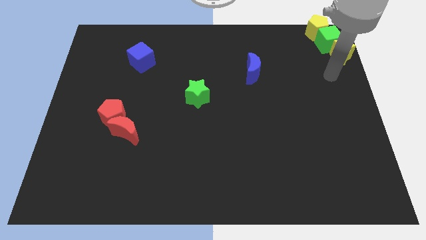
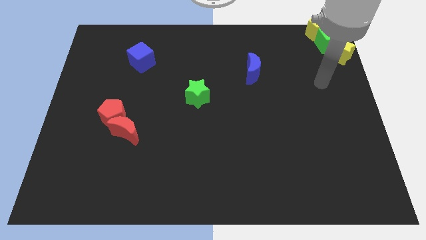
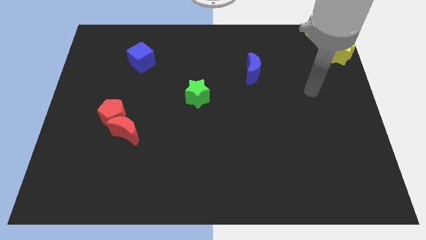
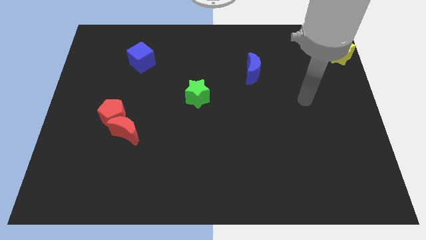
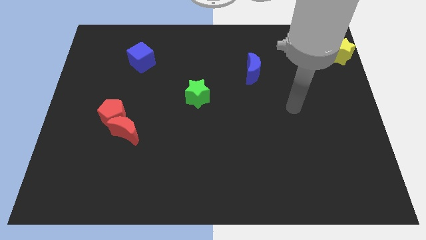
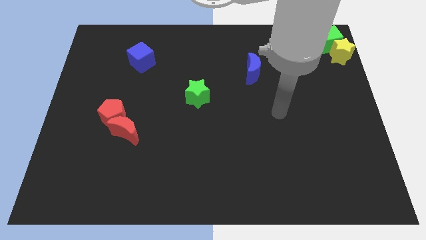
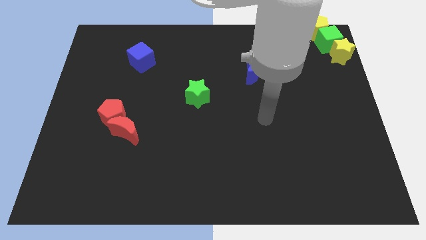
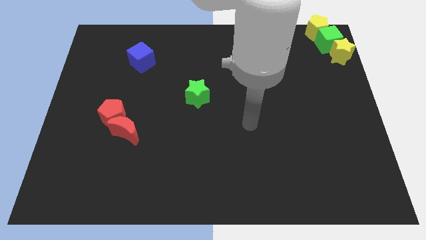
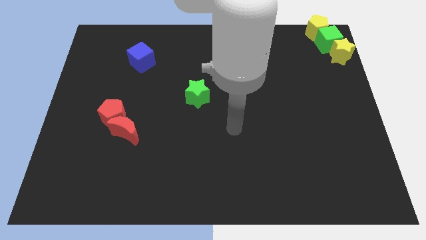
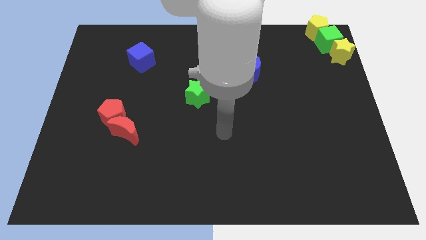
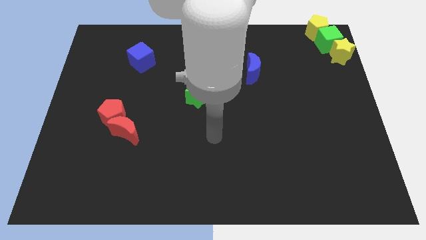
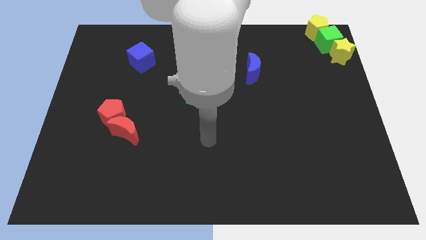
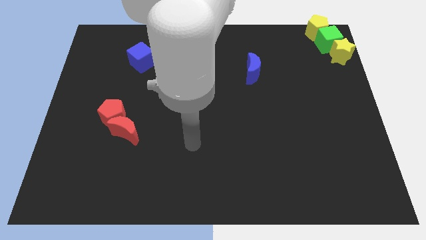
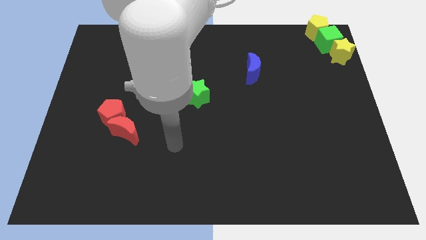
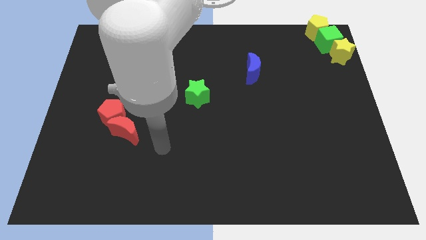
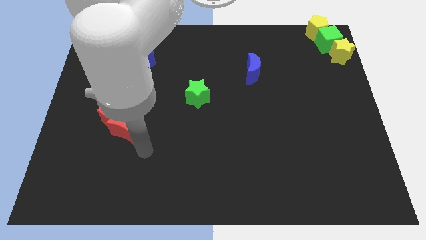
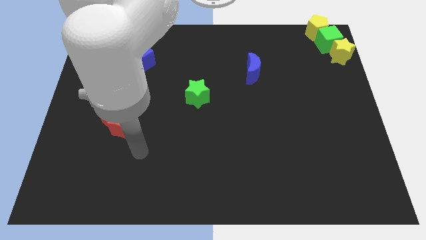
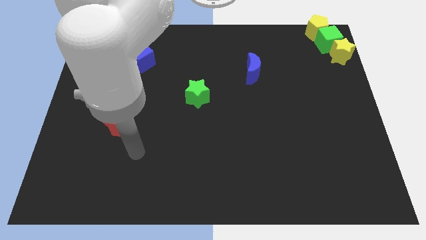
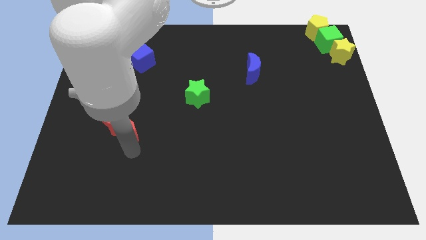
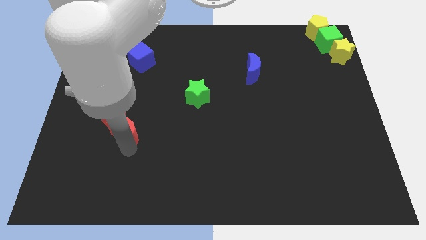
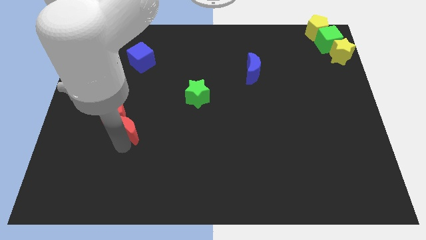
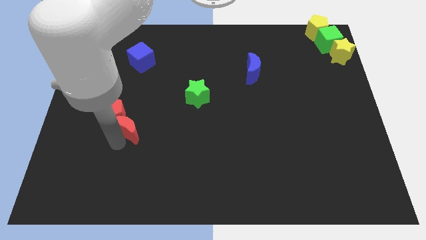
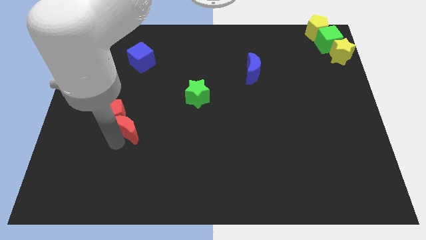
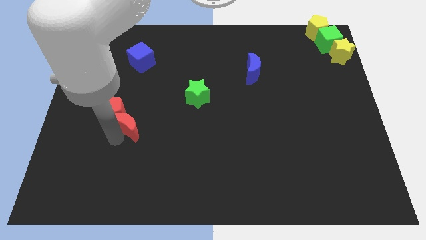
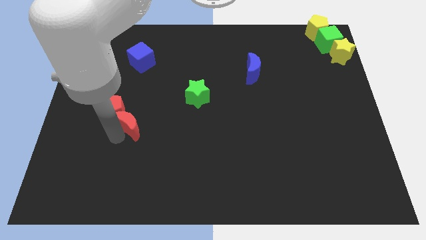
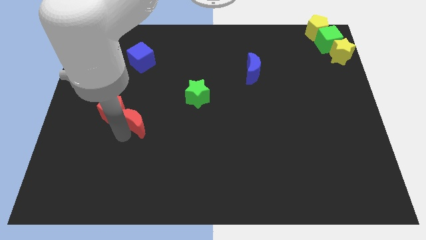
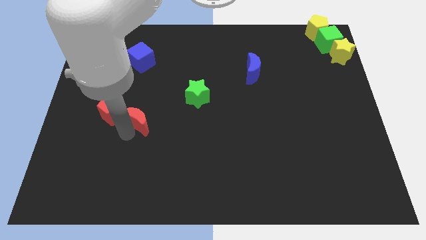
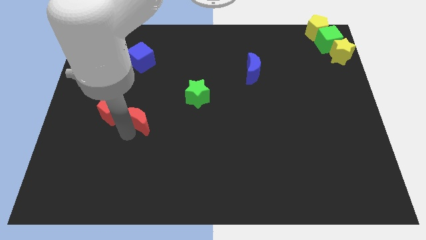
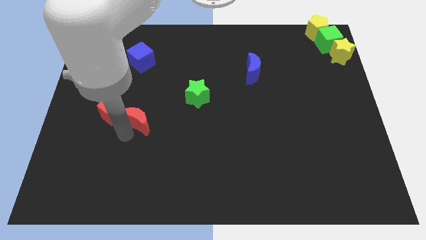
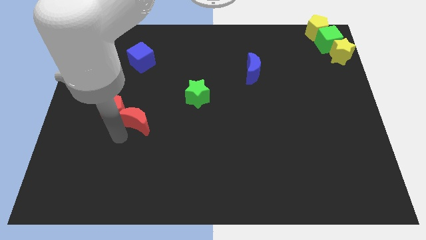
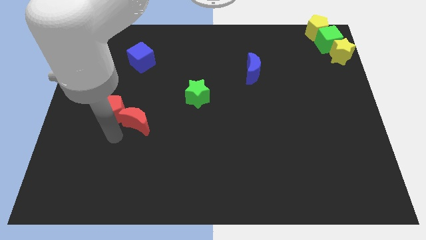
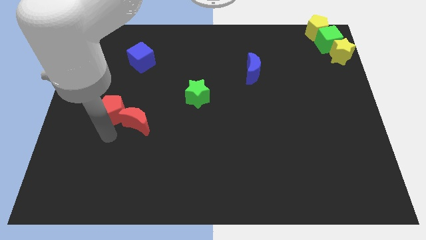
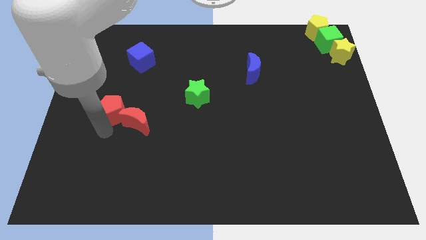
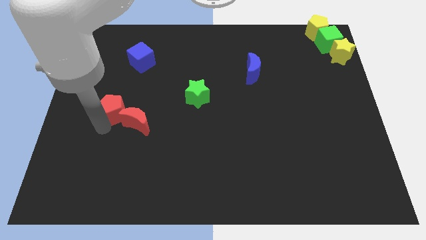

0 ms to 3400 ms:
place red moon to the right of red pentagon

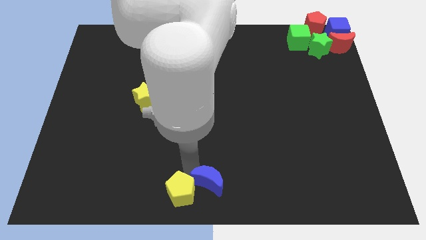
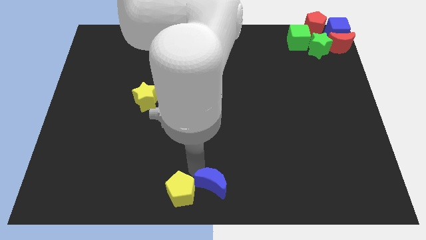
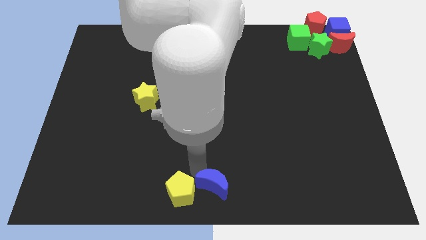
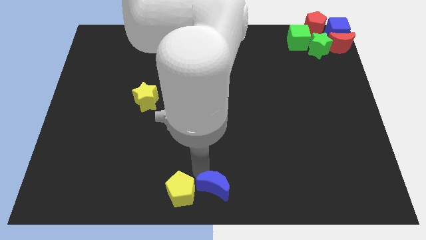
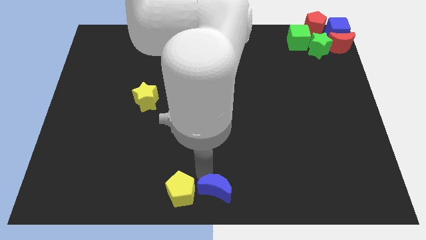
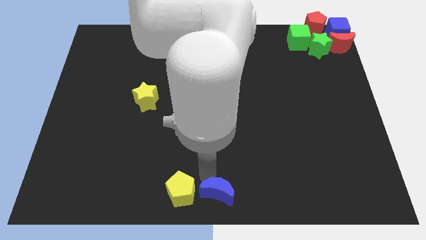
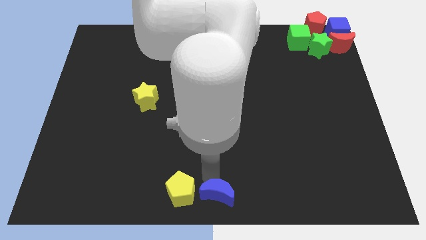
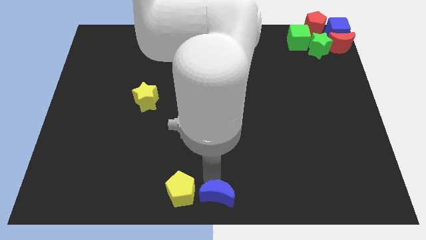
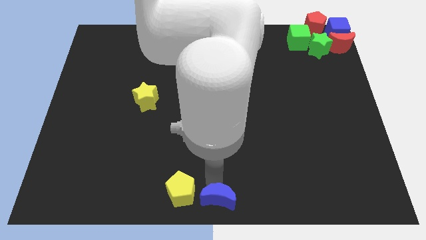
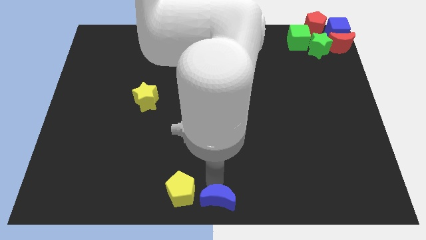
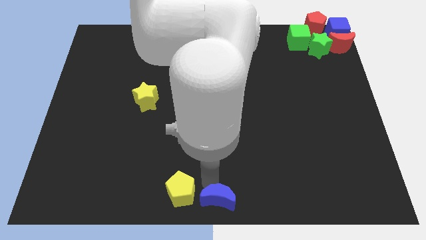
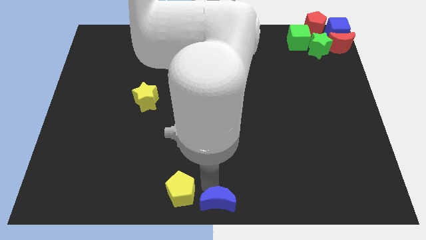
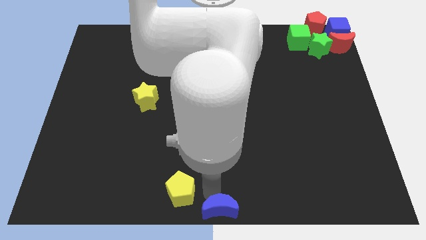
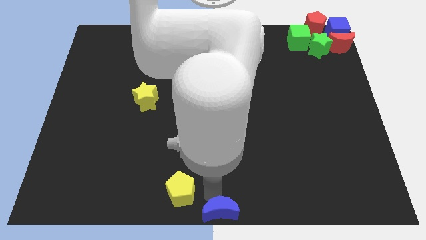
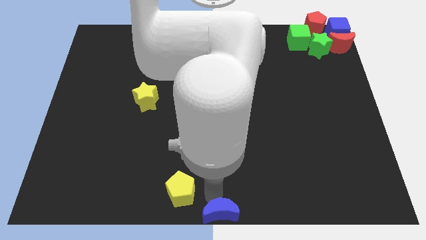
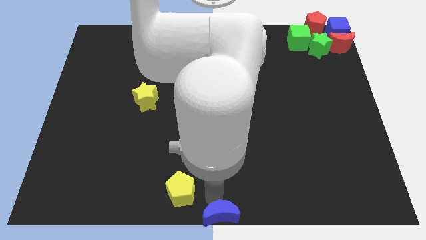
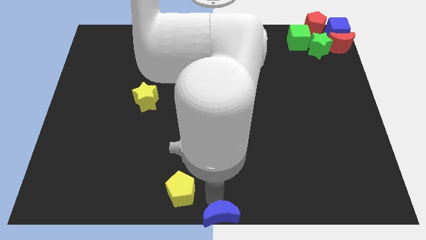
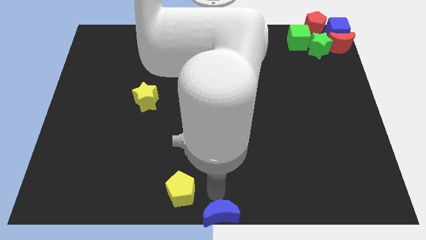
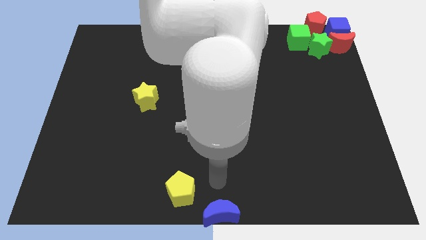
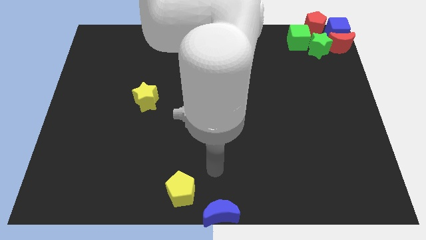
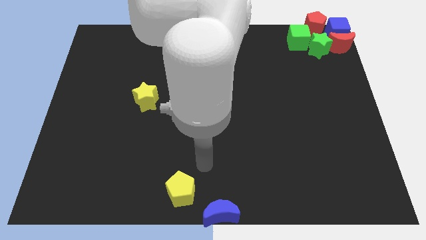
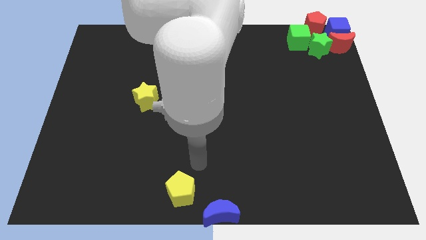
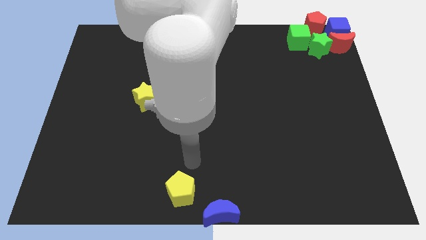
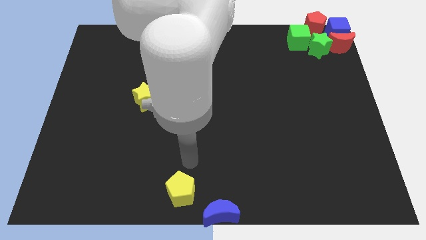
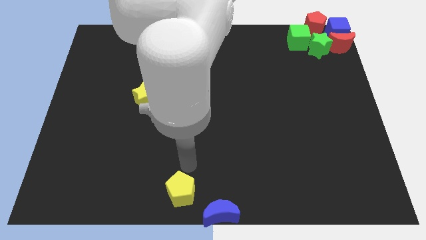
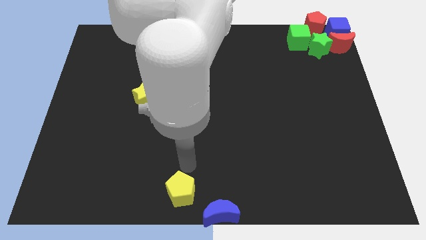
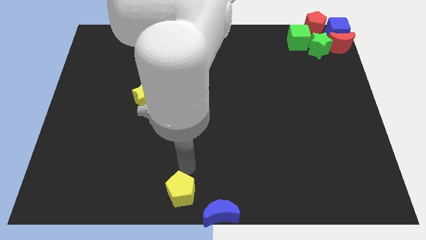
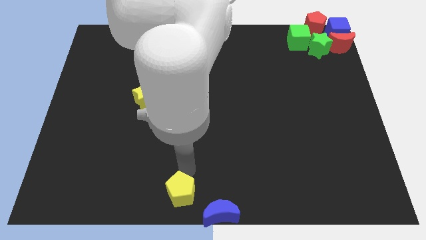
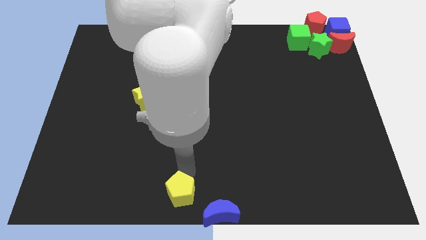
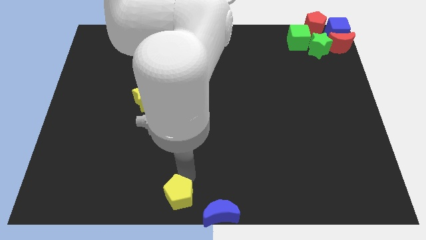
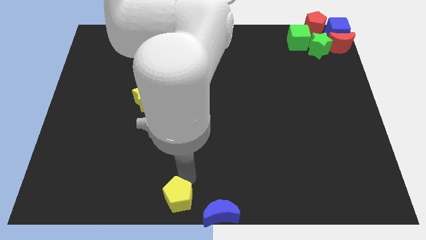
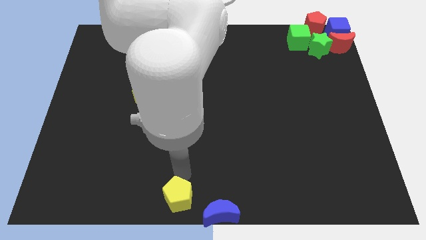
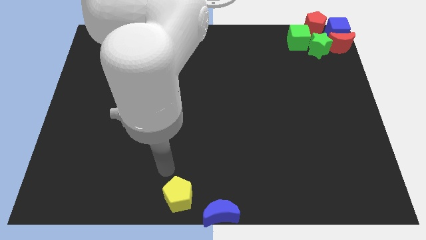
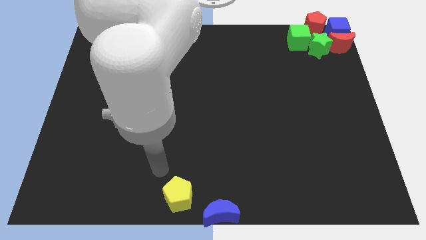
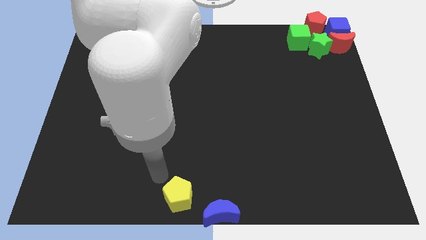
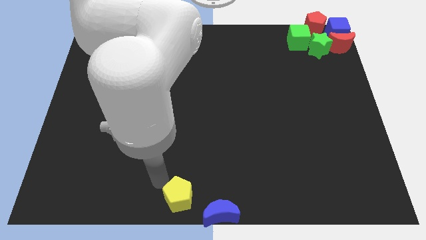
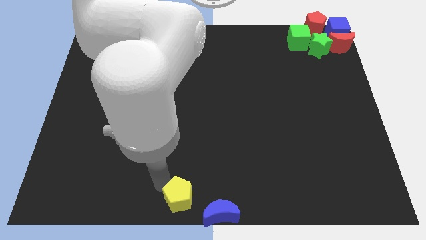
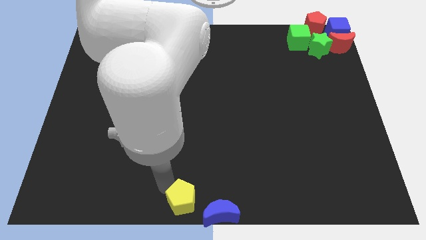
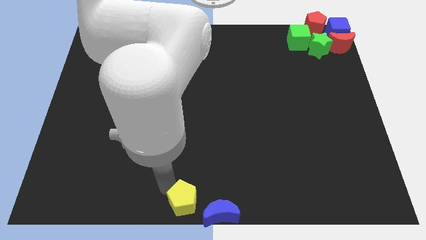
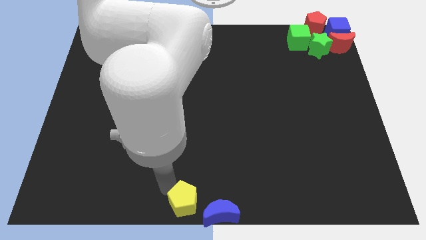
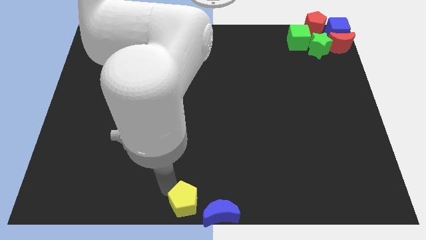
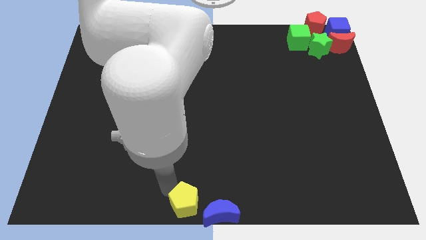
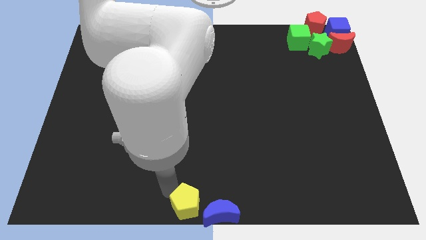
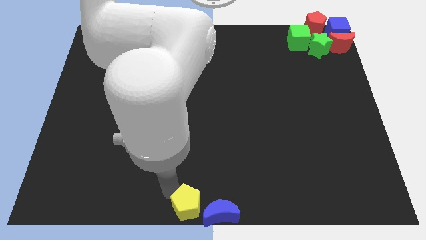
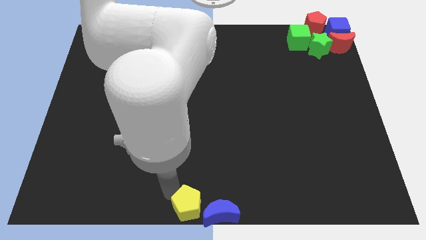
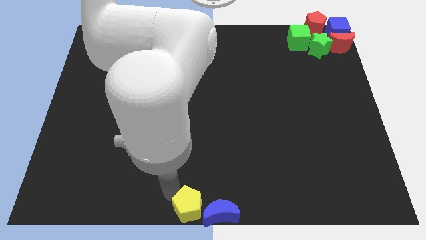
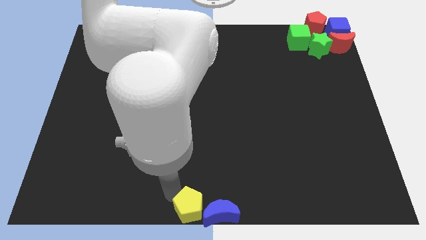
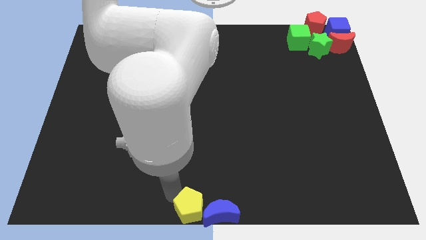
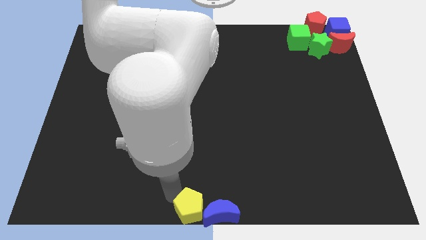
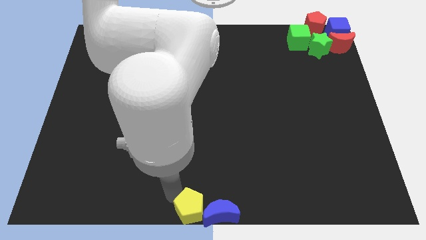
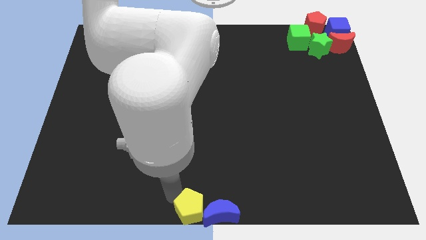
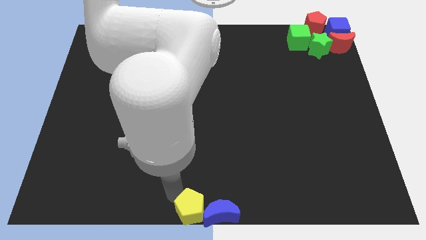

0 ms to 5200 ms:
push the blue moon and yellow block at the bottom center with each other

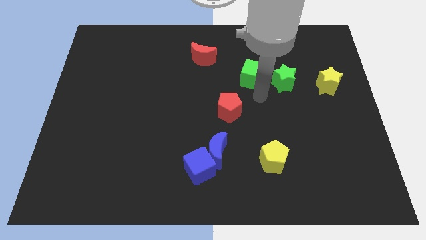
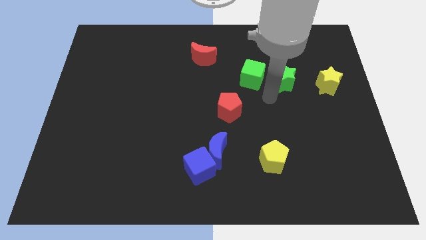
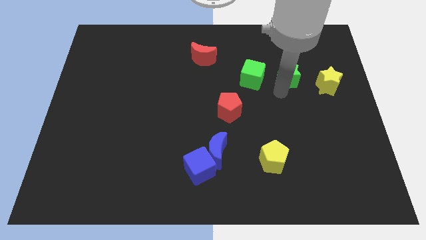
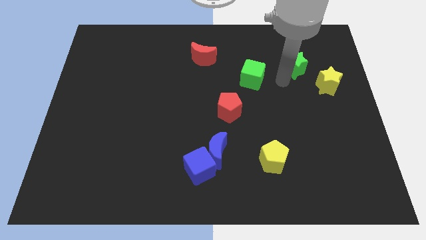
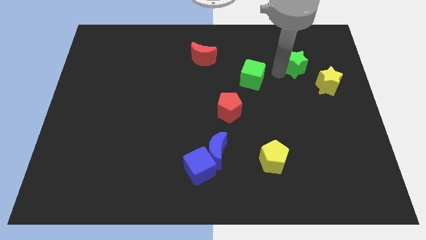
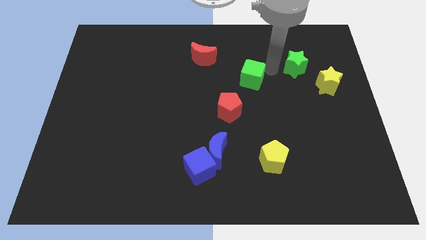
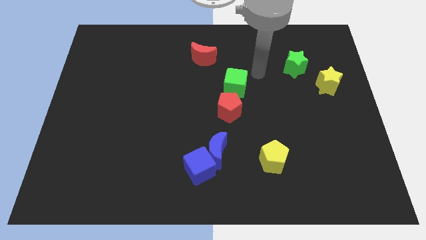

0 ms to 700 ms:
push the green star slightly to the top
